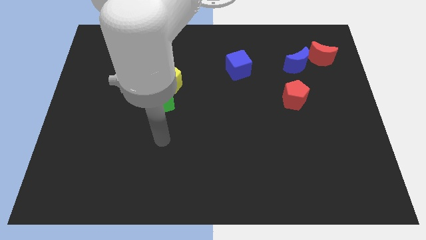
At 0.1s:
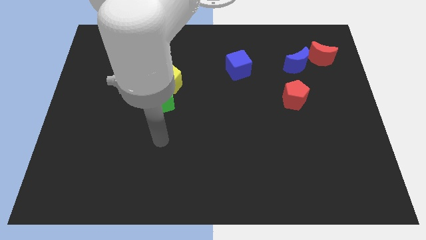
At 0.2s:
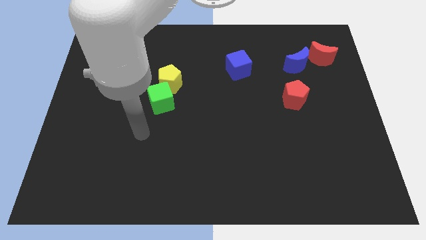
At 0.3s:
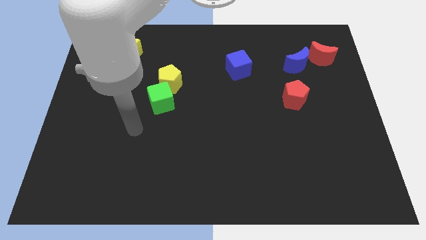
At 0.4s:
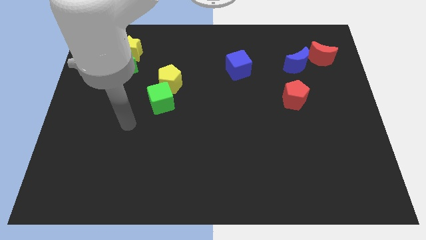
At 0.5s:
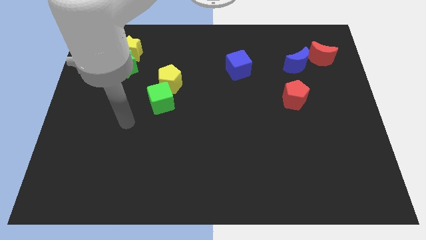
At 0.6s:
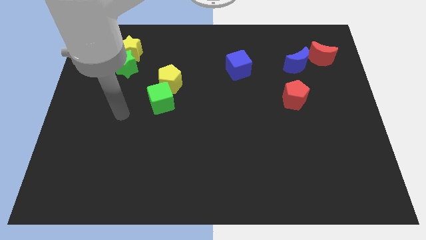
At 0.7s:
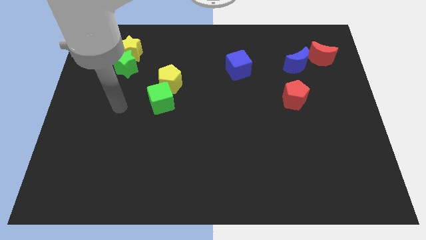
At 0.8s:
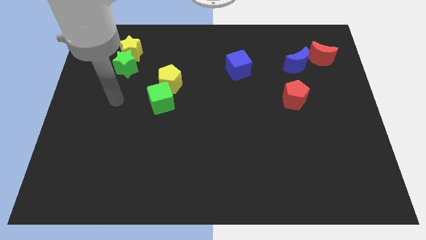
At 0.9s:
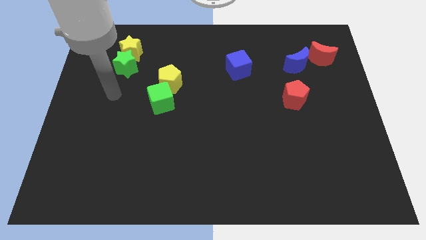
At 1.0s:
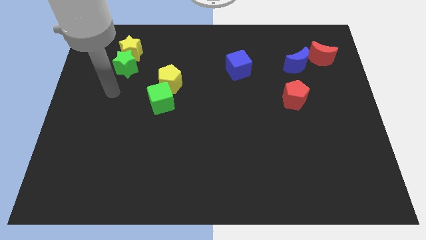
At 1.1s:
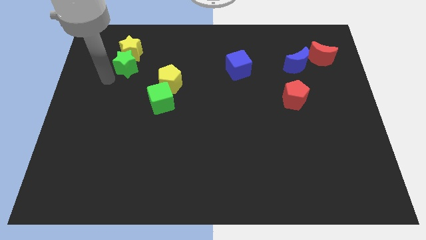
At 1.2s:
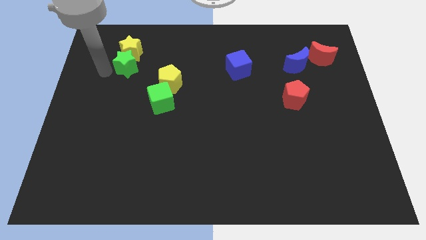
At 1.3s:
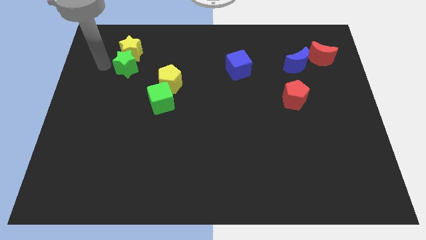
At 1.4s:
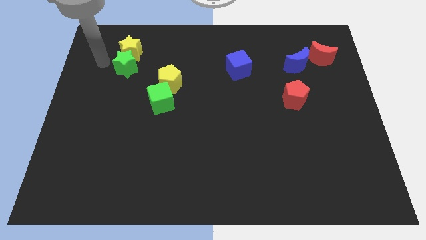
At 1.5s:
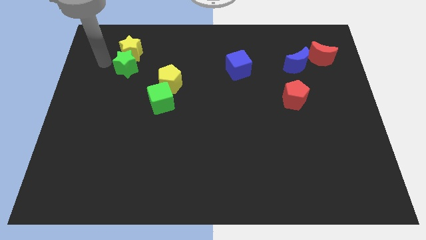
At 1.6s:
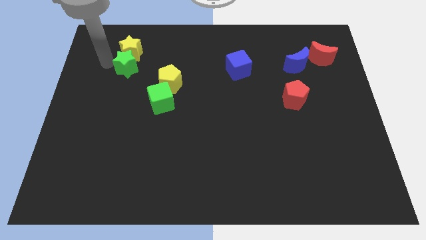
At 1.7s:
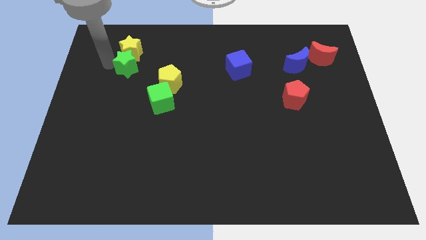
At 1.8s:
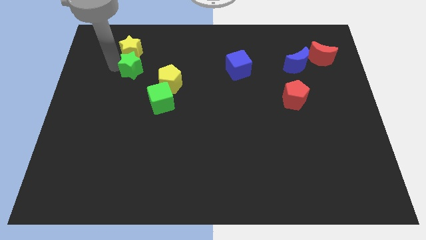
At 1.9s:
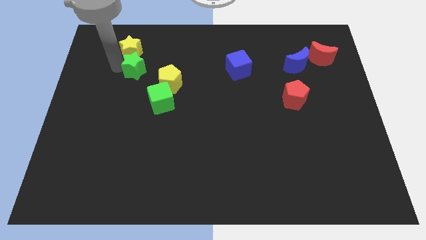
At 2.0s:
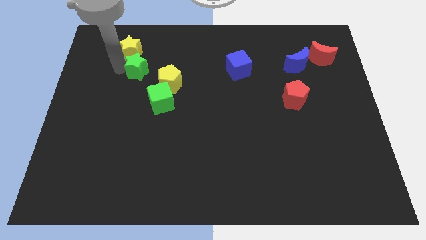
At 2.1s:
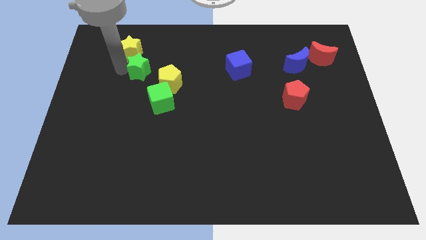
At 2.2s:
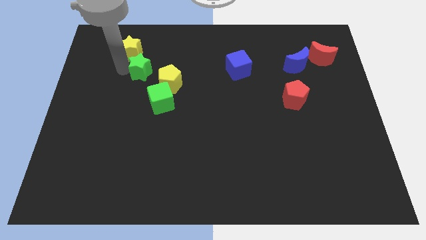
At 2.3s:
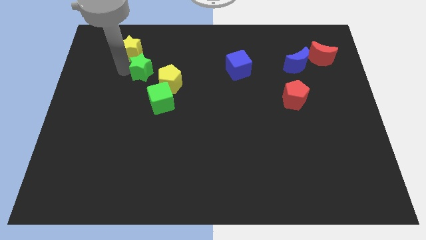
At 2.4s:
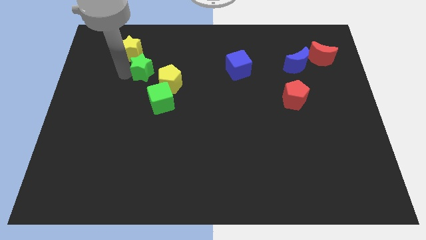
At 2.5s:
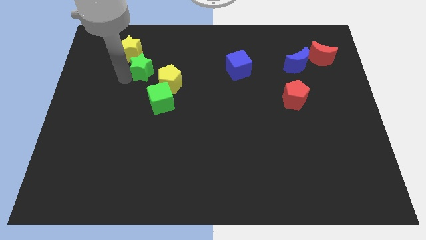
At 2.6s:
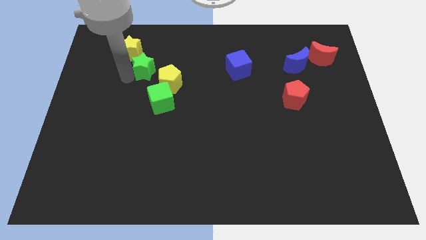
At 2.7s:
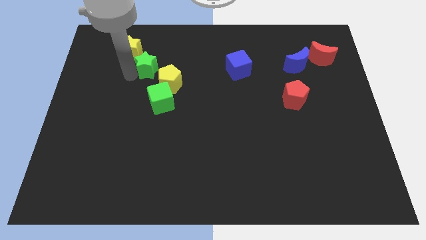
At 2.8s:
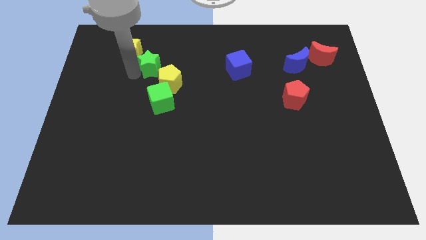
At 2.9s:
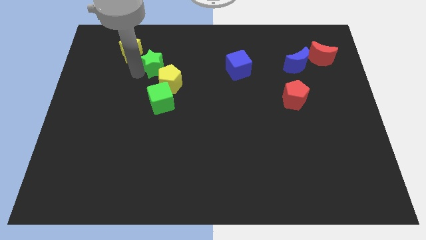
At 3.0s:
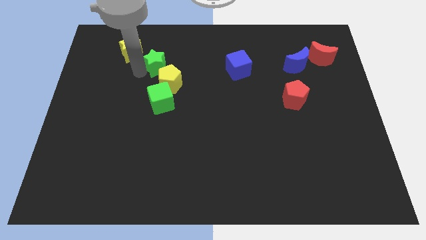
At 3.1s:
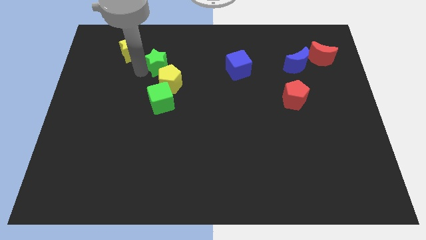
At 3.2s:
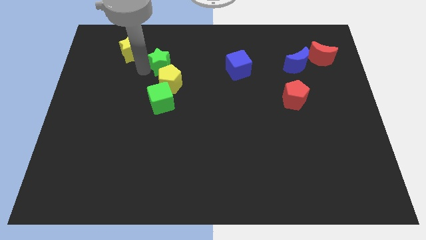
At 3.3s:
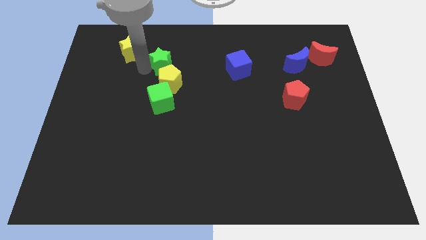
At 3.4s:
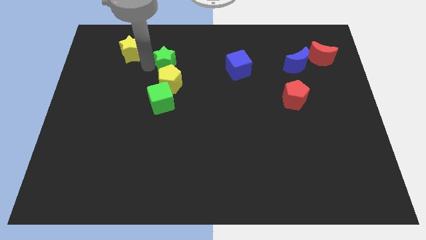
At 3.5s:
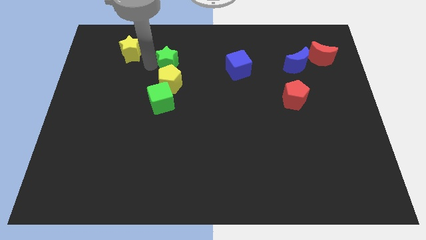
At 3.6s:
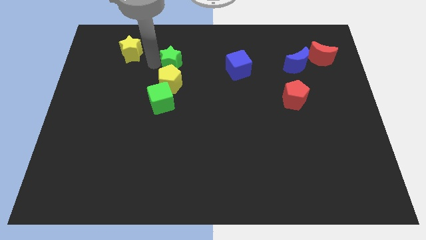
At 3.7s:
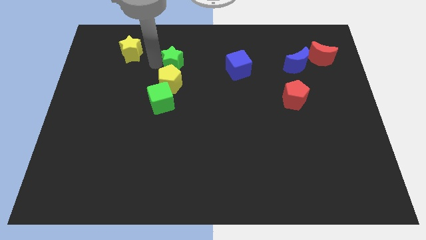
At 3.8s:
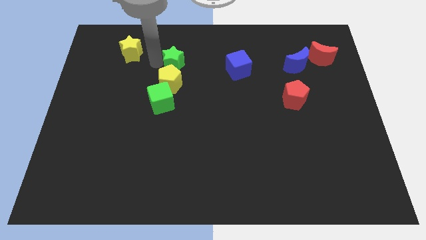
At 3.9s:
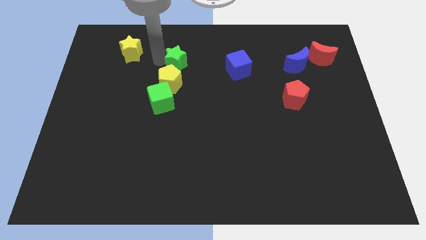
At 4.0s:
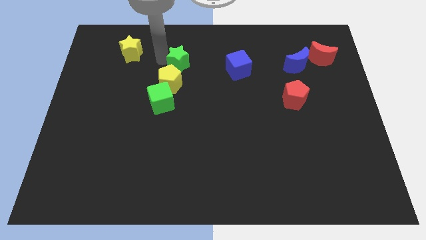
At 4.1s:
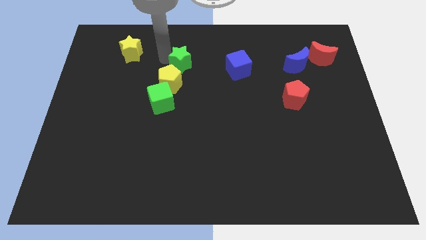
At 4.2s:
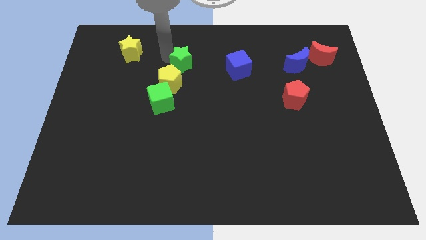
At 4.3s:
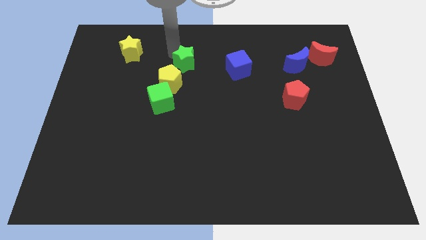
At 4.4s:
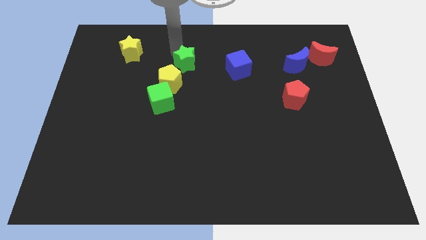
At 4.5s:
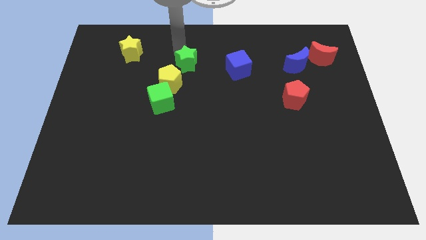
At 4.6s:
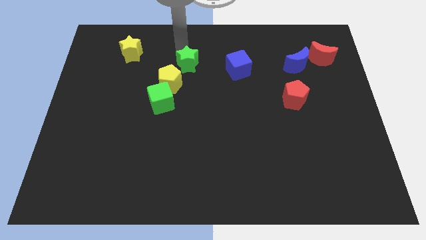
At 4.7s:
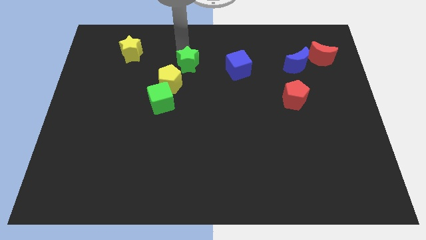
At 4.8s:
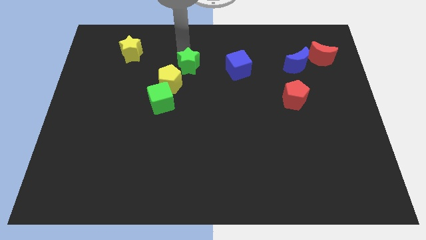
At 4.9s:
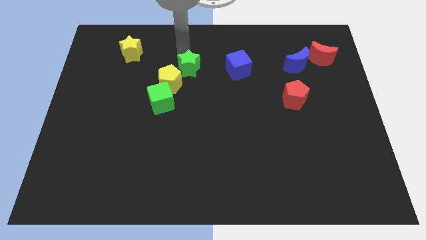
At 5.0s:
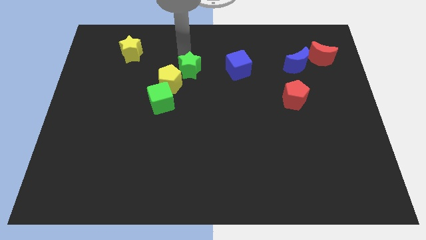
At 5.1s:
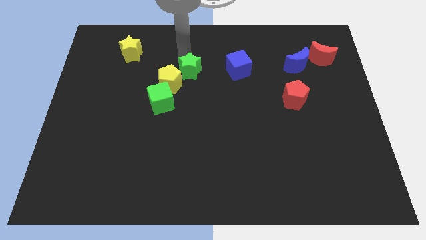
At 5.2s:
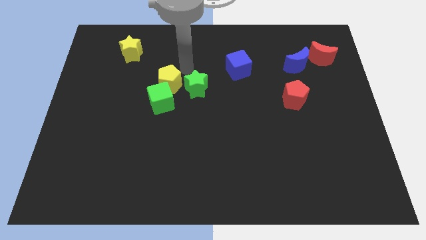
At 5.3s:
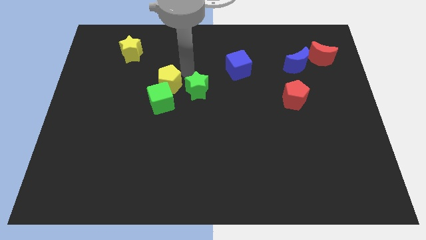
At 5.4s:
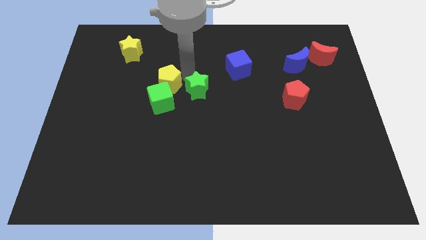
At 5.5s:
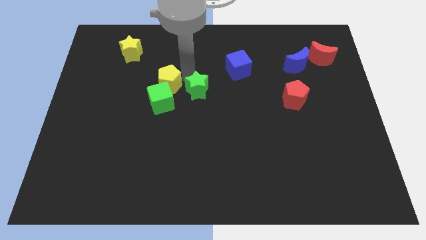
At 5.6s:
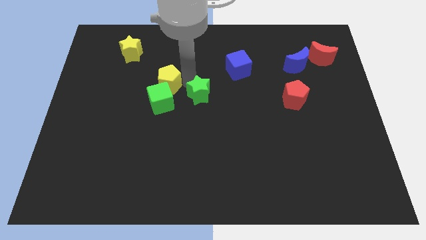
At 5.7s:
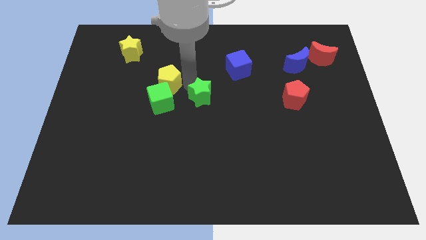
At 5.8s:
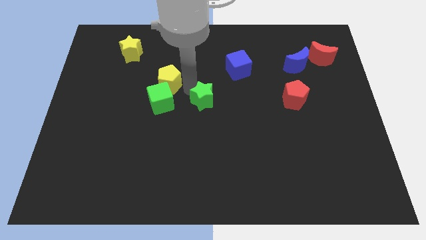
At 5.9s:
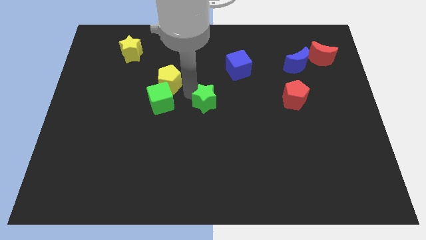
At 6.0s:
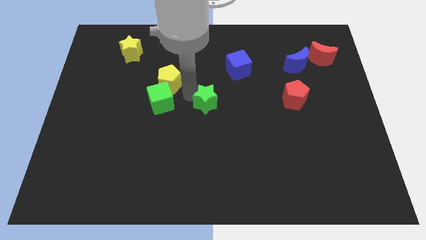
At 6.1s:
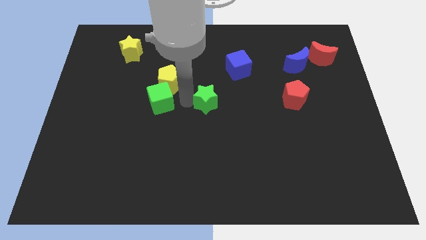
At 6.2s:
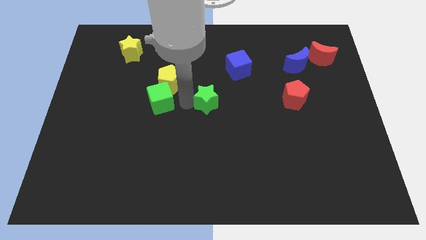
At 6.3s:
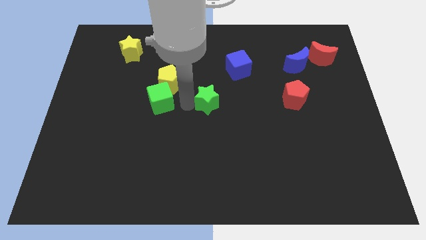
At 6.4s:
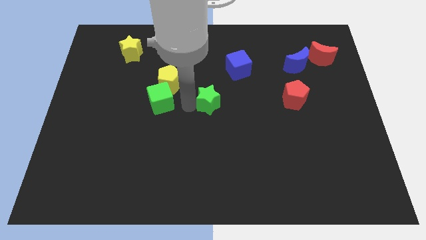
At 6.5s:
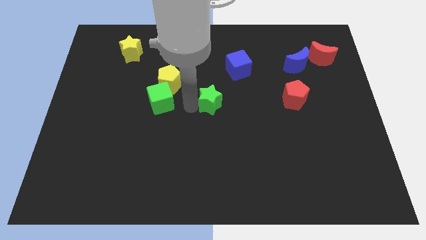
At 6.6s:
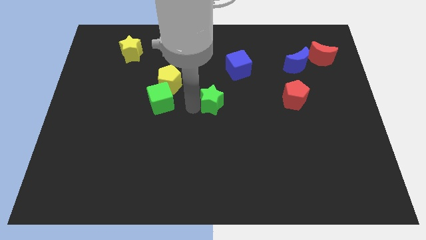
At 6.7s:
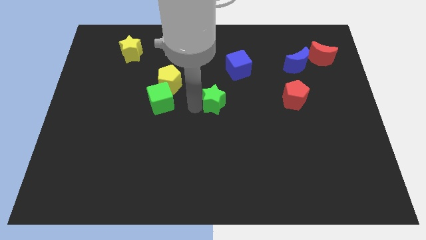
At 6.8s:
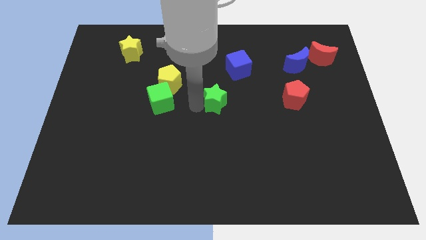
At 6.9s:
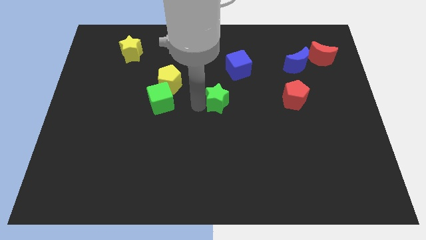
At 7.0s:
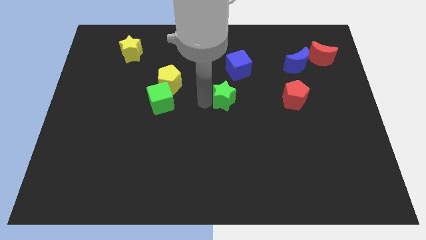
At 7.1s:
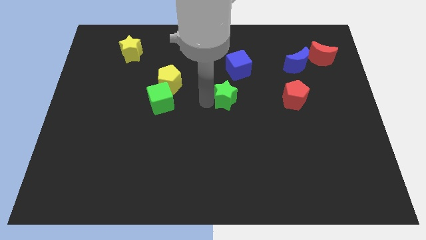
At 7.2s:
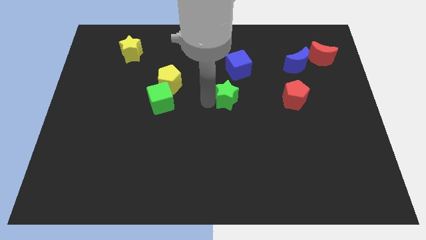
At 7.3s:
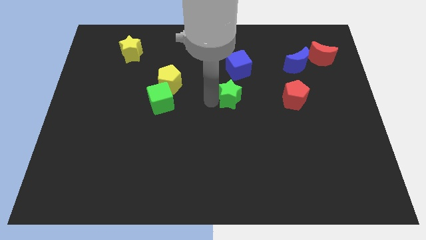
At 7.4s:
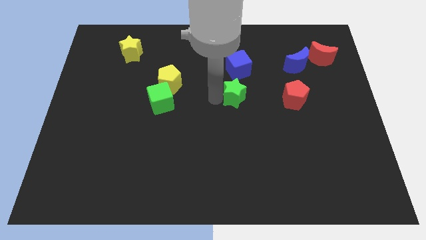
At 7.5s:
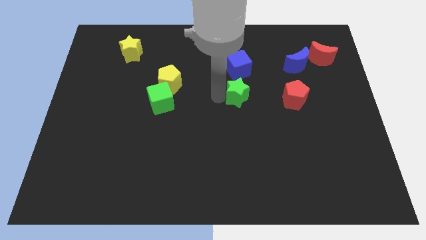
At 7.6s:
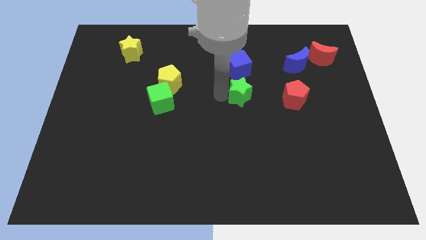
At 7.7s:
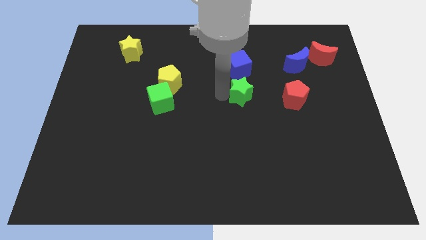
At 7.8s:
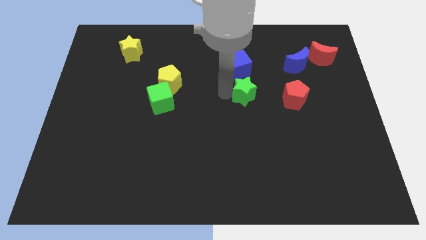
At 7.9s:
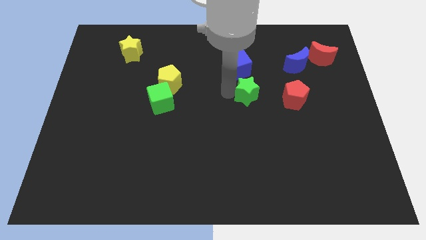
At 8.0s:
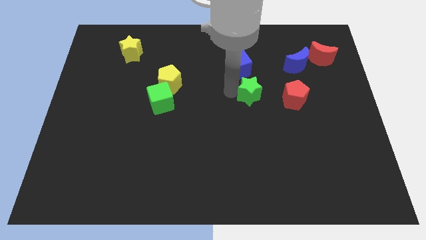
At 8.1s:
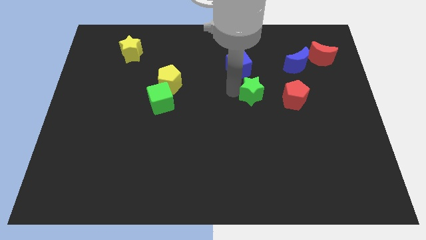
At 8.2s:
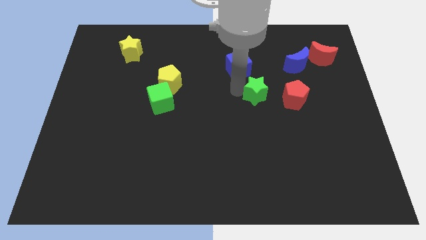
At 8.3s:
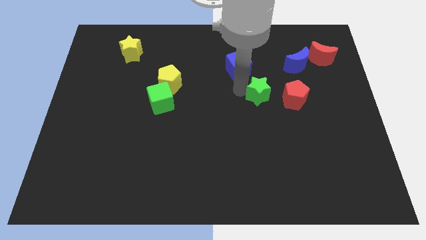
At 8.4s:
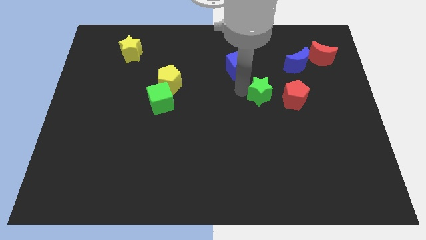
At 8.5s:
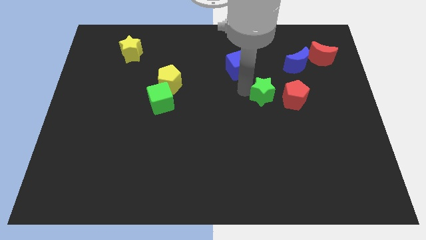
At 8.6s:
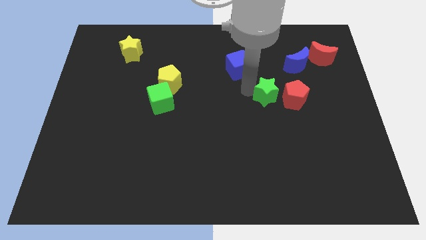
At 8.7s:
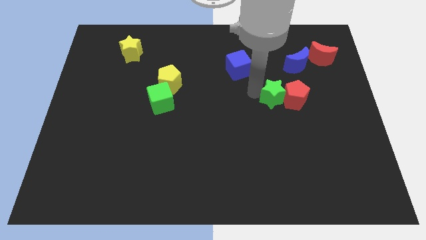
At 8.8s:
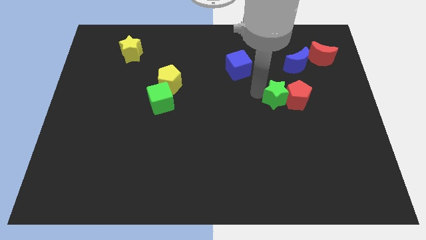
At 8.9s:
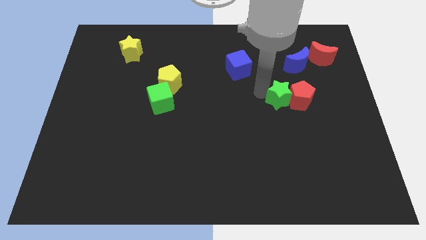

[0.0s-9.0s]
push the green star next to the red pentagon
